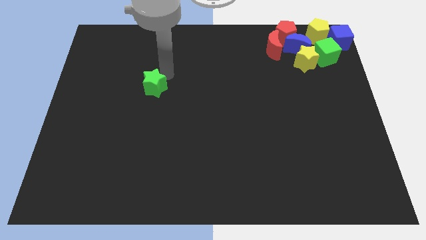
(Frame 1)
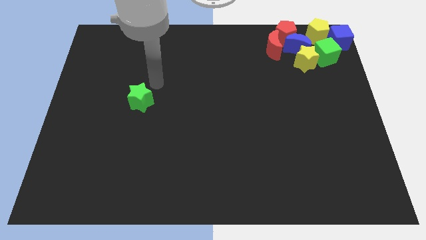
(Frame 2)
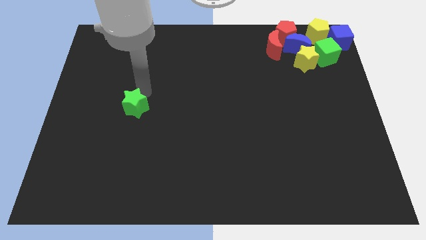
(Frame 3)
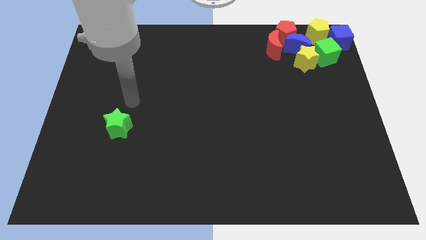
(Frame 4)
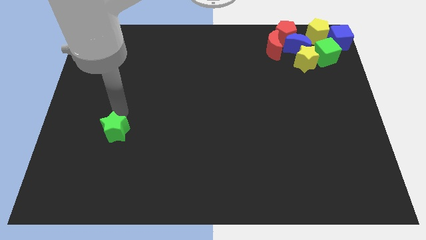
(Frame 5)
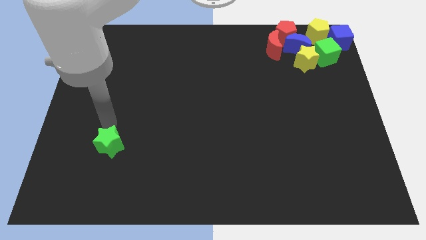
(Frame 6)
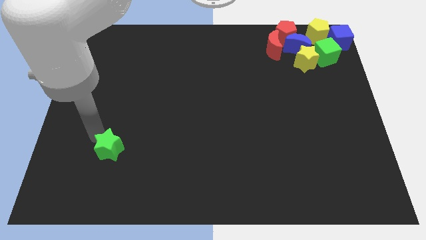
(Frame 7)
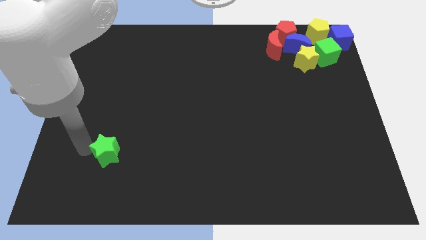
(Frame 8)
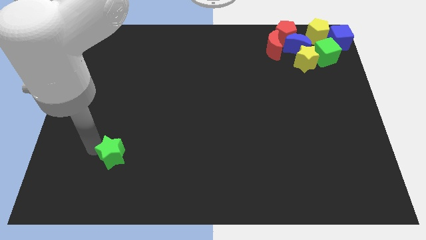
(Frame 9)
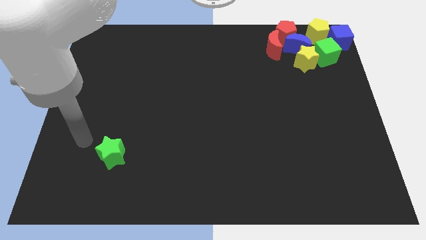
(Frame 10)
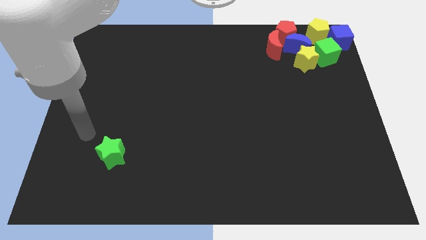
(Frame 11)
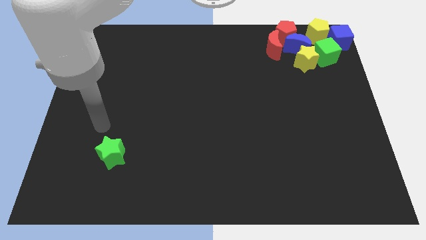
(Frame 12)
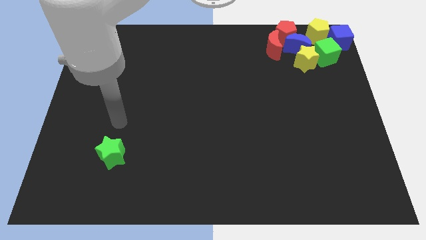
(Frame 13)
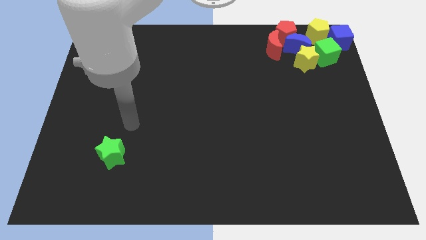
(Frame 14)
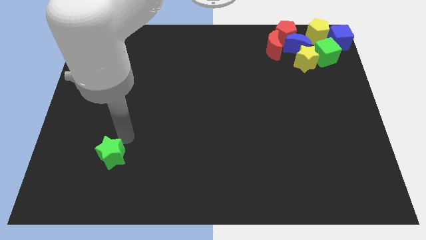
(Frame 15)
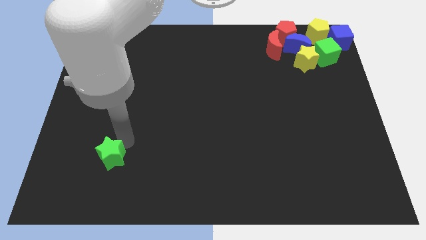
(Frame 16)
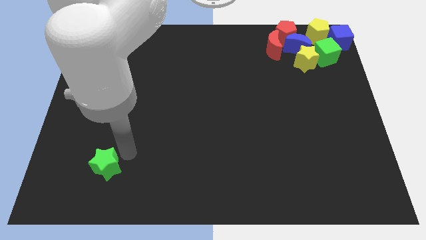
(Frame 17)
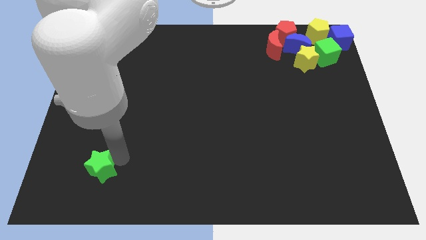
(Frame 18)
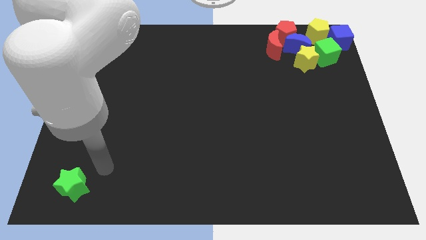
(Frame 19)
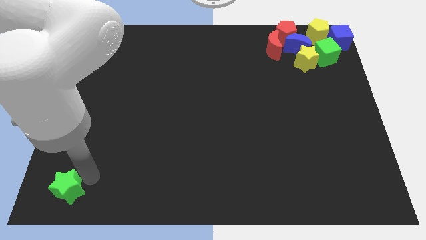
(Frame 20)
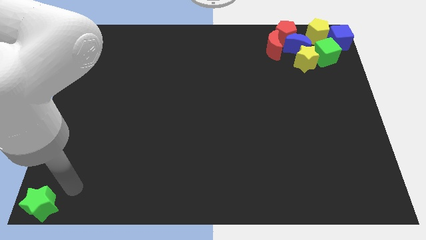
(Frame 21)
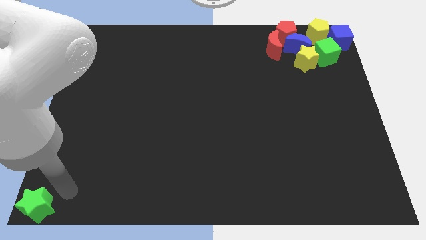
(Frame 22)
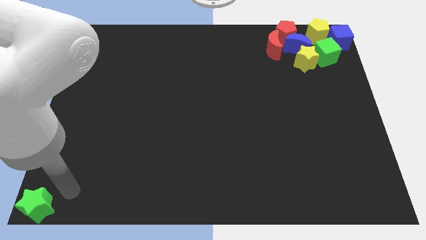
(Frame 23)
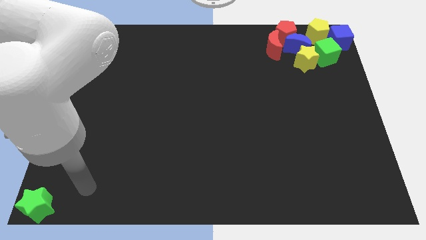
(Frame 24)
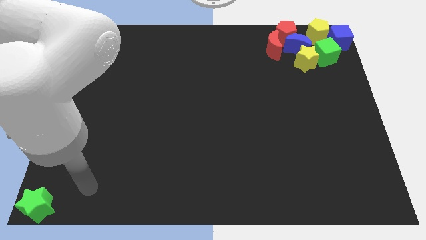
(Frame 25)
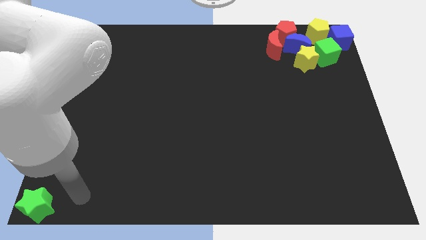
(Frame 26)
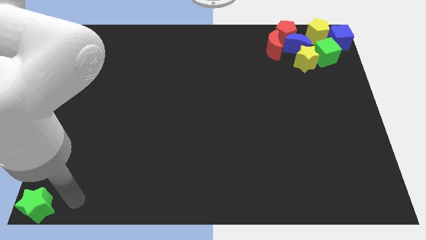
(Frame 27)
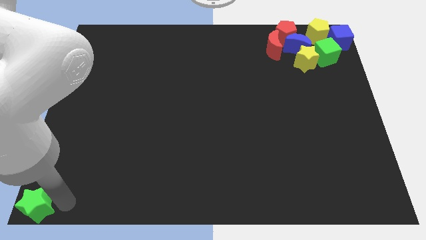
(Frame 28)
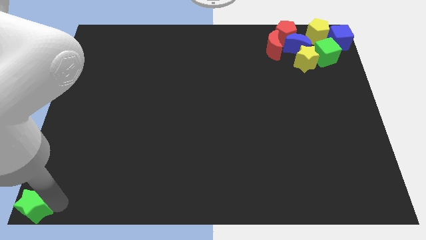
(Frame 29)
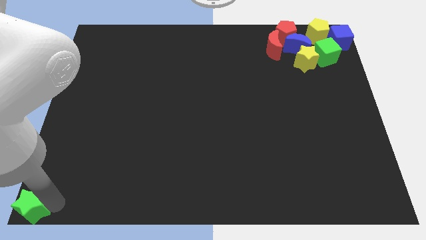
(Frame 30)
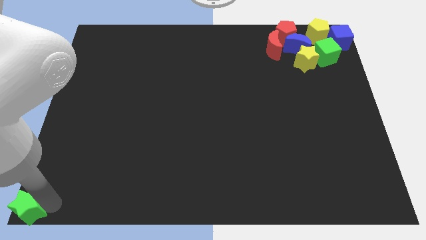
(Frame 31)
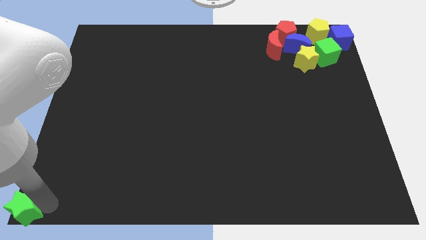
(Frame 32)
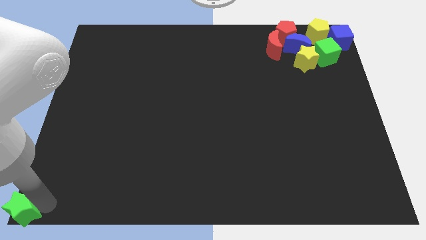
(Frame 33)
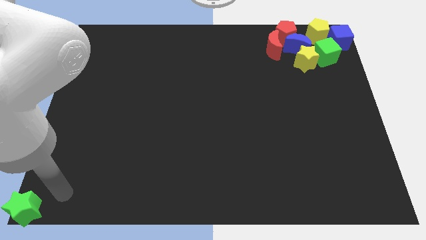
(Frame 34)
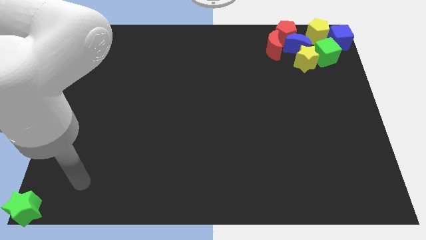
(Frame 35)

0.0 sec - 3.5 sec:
place the green star to the bottom left corner of the board

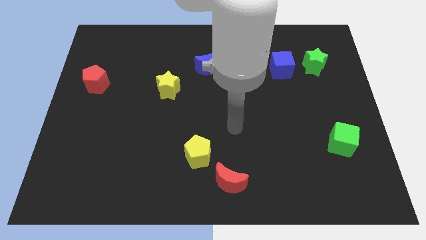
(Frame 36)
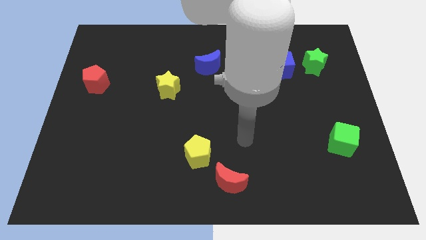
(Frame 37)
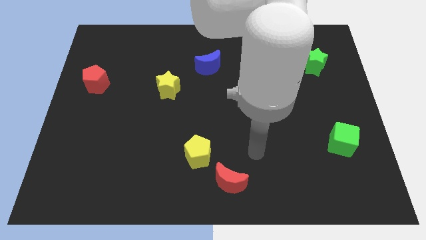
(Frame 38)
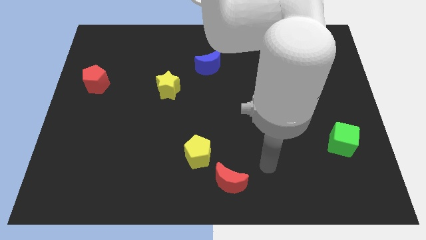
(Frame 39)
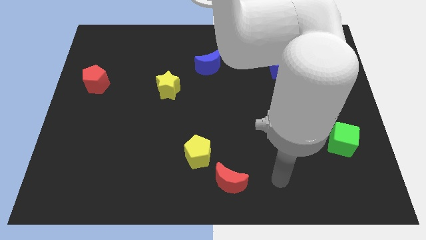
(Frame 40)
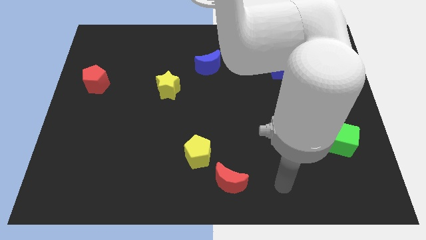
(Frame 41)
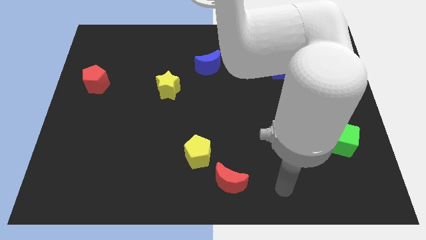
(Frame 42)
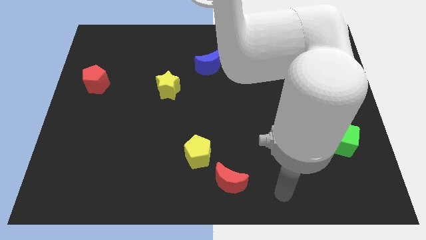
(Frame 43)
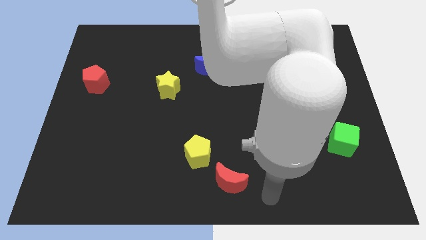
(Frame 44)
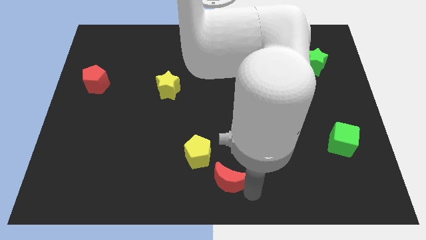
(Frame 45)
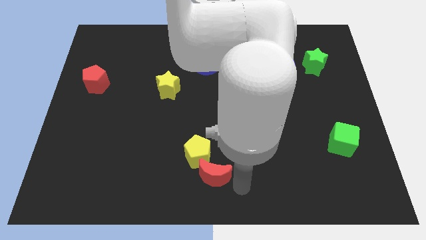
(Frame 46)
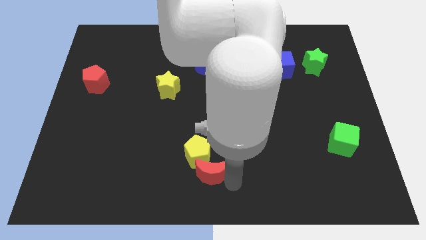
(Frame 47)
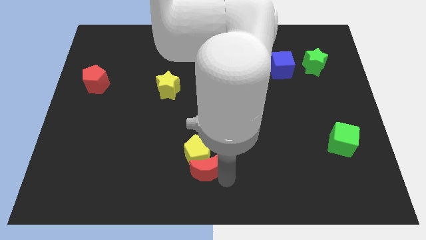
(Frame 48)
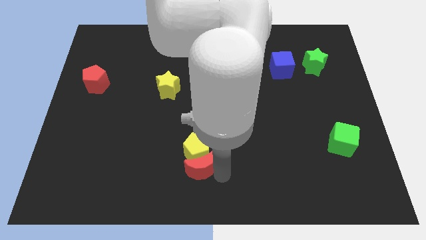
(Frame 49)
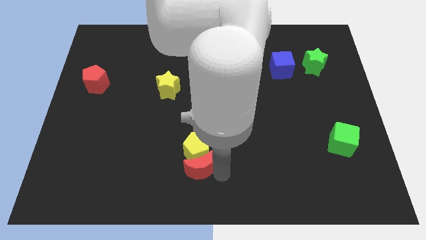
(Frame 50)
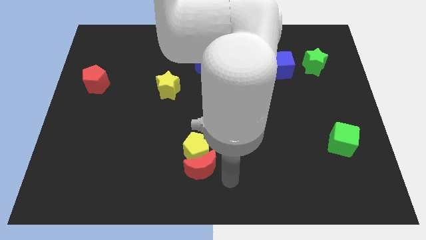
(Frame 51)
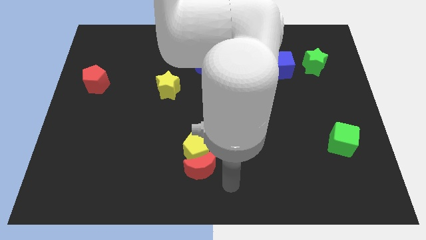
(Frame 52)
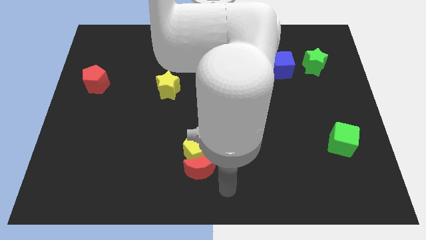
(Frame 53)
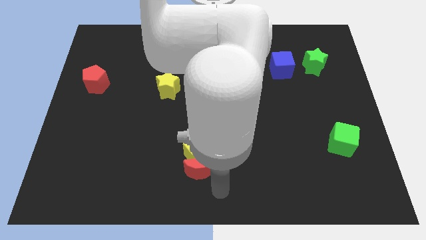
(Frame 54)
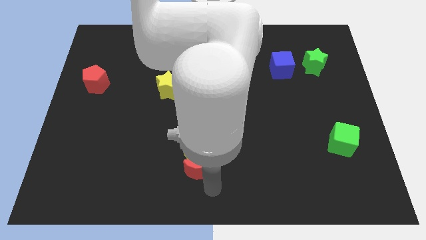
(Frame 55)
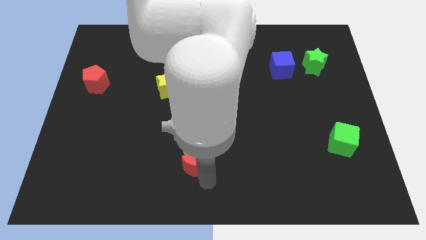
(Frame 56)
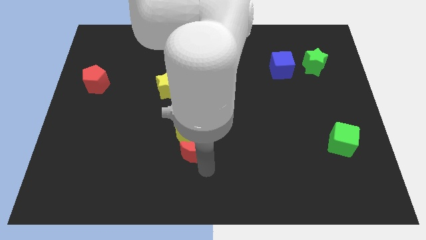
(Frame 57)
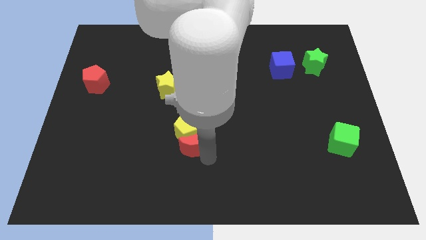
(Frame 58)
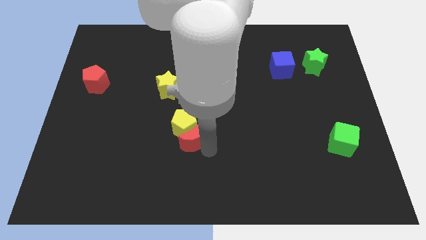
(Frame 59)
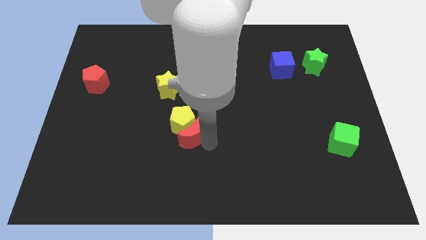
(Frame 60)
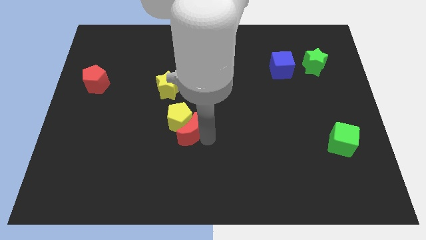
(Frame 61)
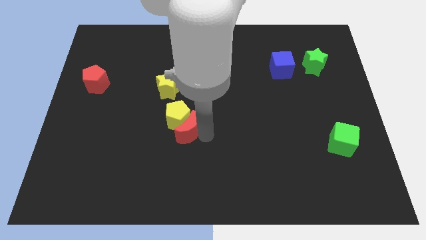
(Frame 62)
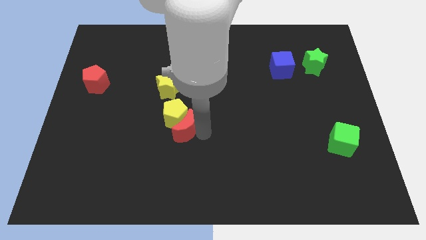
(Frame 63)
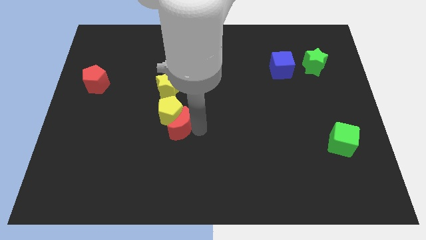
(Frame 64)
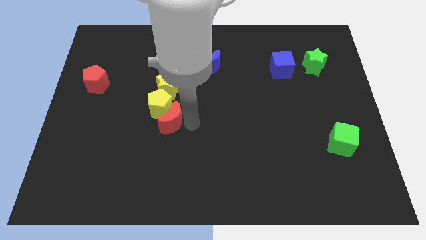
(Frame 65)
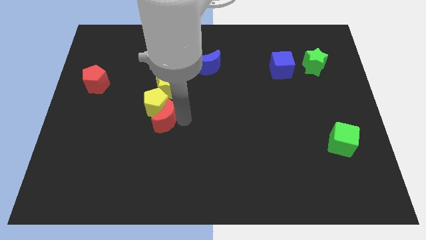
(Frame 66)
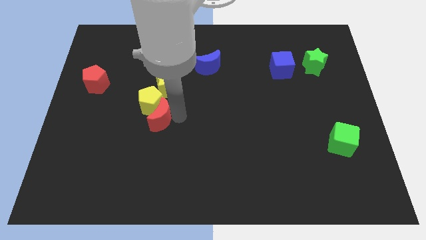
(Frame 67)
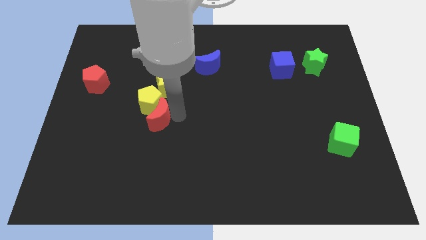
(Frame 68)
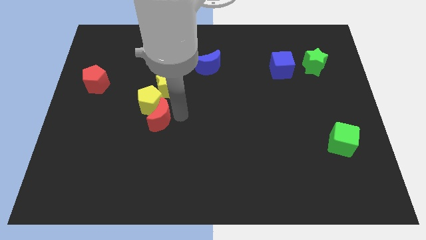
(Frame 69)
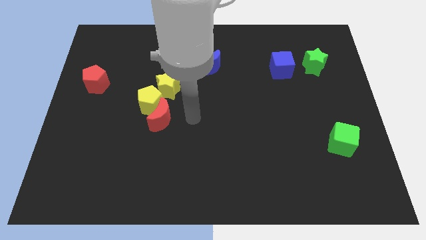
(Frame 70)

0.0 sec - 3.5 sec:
move red crescent and yellow pentagon close to the yellow star

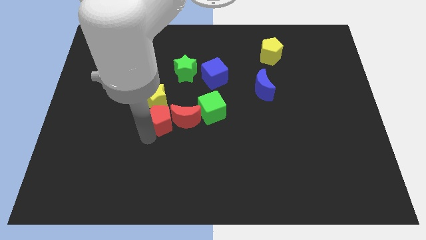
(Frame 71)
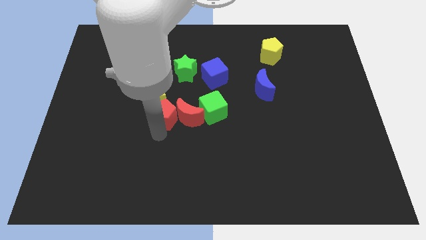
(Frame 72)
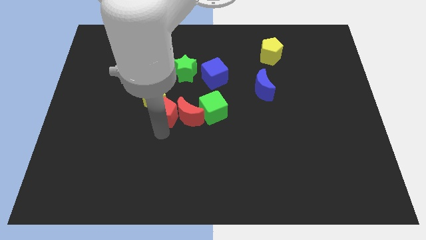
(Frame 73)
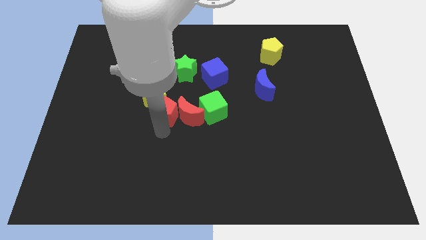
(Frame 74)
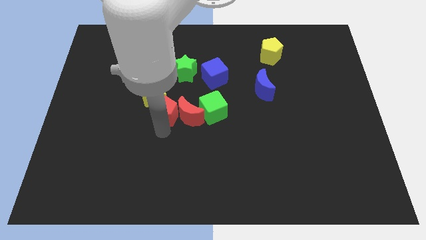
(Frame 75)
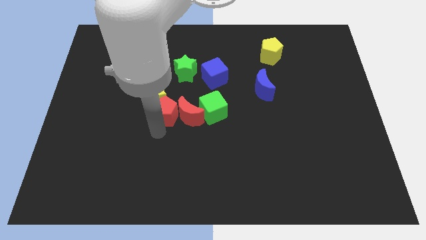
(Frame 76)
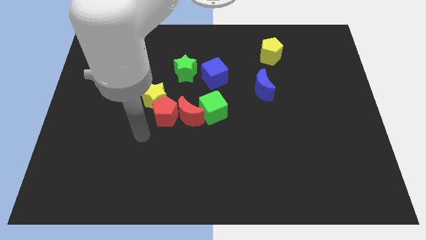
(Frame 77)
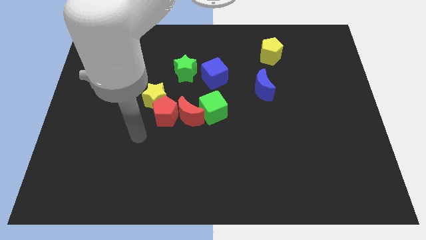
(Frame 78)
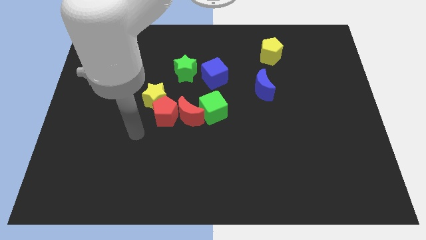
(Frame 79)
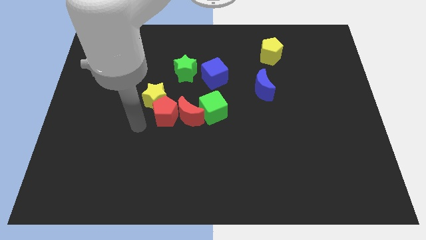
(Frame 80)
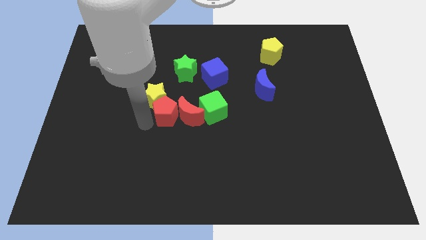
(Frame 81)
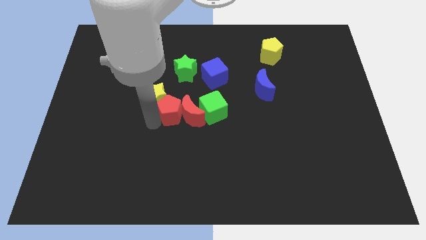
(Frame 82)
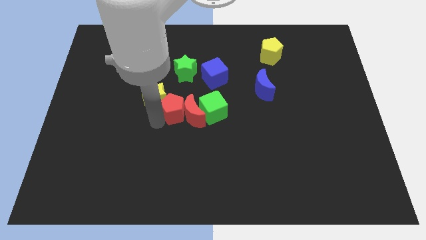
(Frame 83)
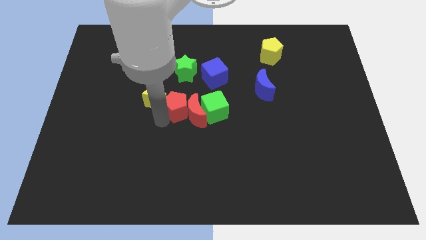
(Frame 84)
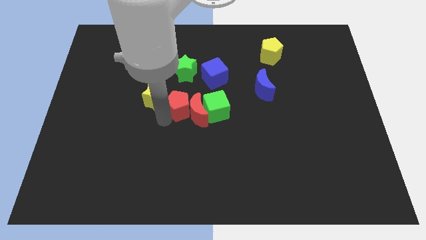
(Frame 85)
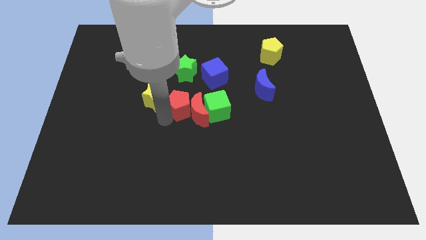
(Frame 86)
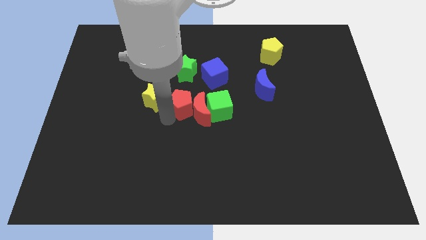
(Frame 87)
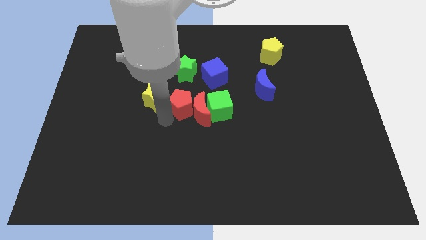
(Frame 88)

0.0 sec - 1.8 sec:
put the red pentagon vertically below the green star
